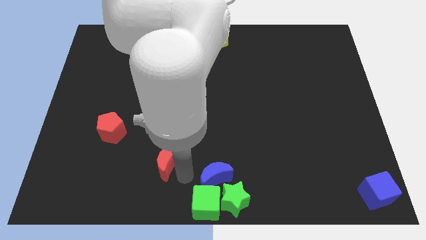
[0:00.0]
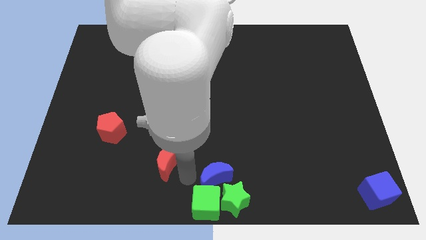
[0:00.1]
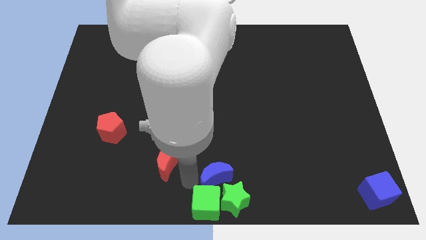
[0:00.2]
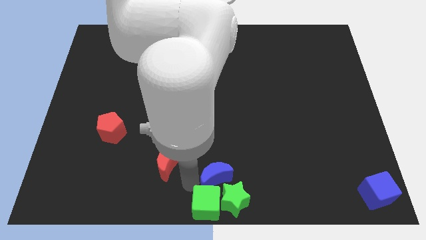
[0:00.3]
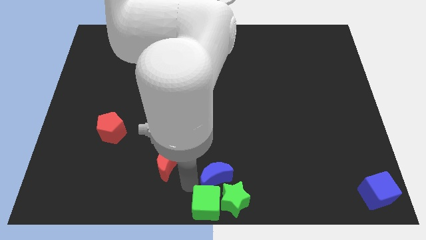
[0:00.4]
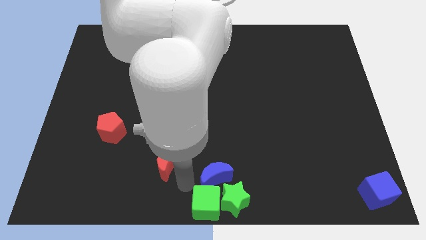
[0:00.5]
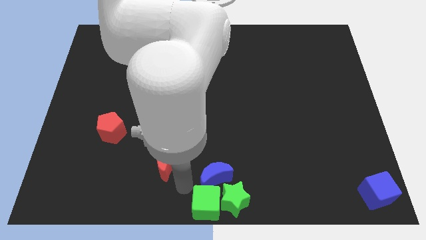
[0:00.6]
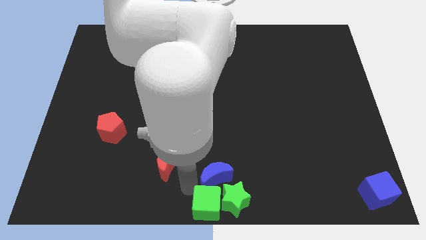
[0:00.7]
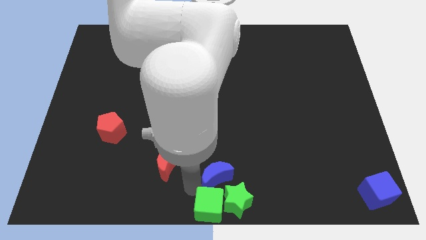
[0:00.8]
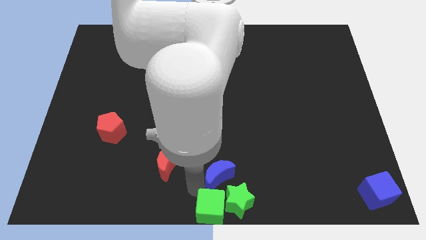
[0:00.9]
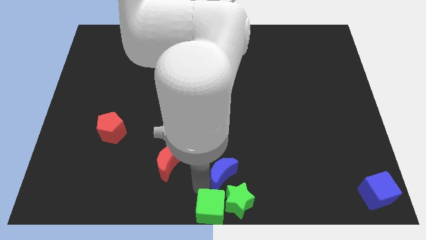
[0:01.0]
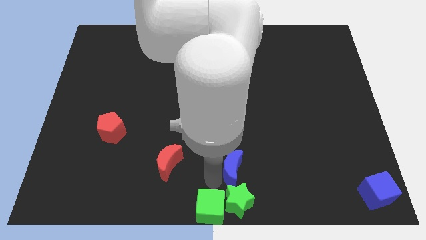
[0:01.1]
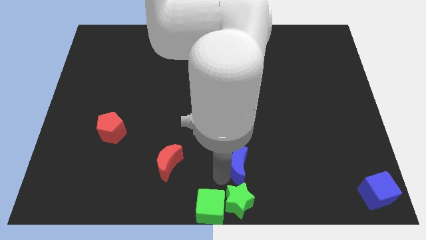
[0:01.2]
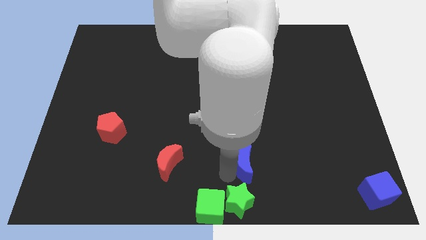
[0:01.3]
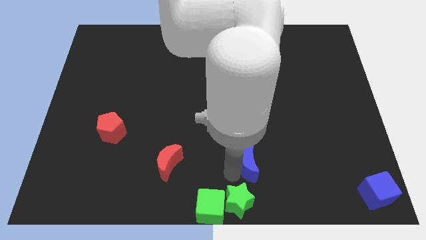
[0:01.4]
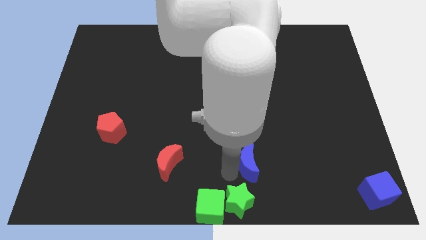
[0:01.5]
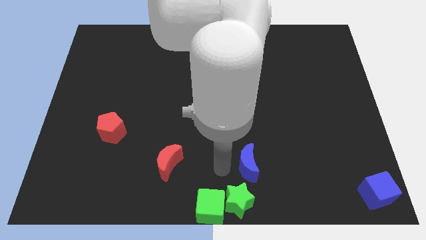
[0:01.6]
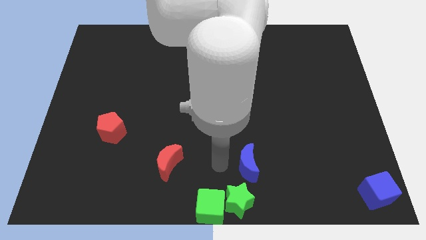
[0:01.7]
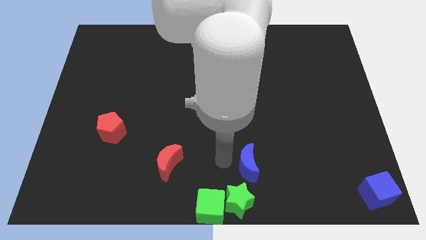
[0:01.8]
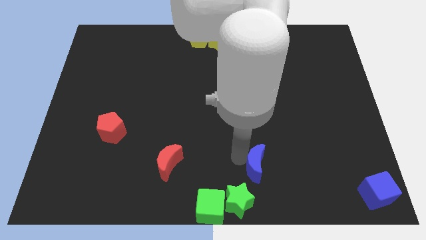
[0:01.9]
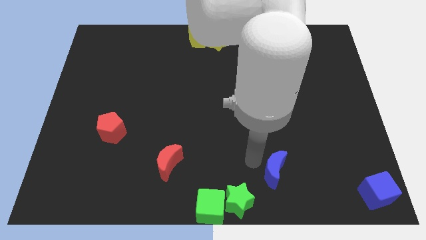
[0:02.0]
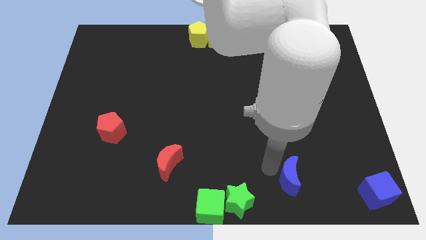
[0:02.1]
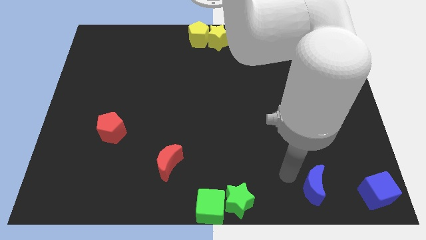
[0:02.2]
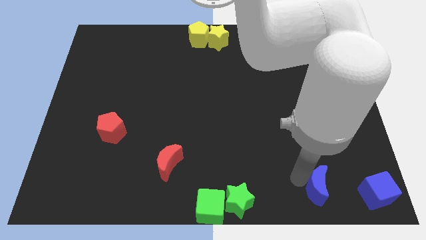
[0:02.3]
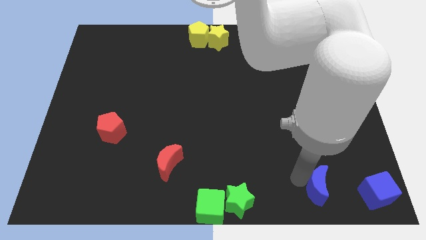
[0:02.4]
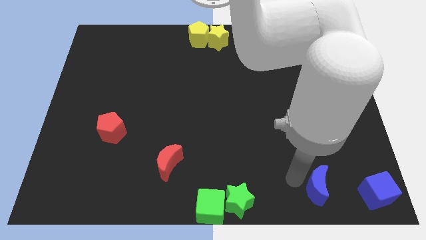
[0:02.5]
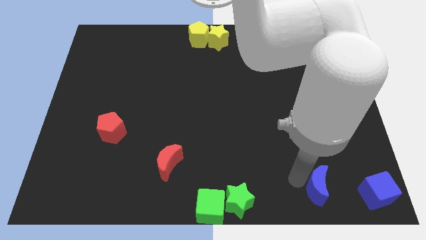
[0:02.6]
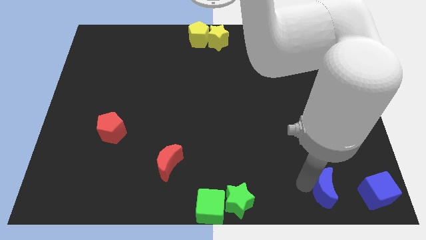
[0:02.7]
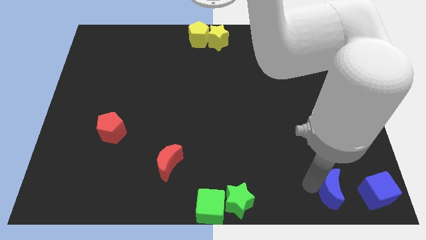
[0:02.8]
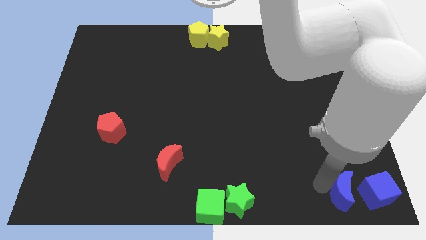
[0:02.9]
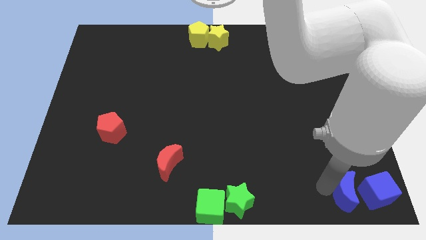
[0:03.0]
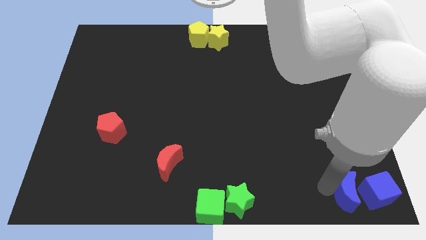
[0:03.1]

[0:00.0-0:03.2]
place the blue moon left to the blue cube

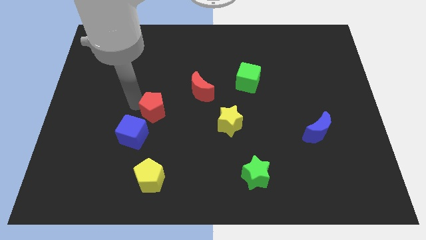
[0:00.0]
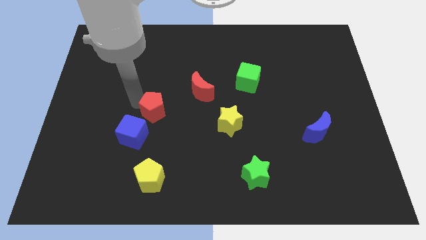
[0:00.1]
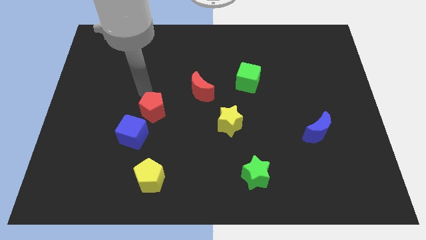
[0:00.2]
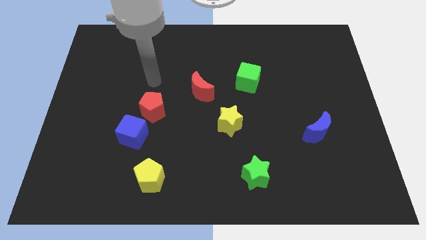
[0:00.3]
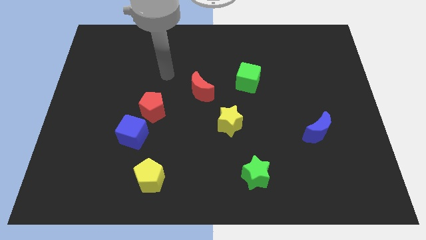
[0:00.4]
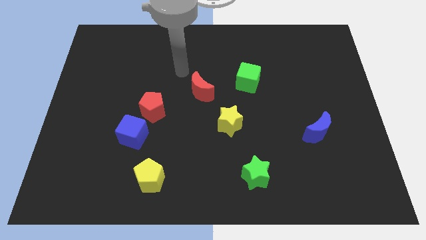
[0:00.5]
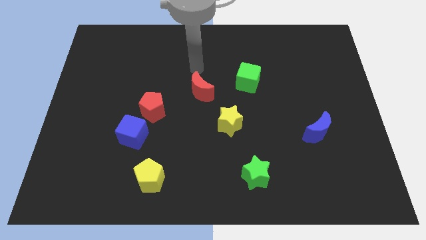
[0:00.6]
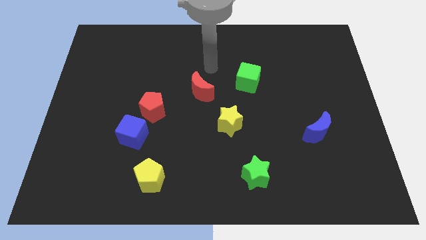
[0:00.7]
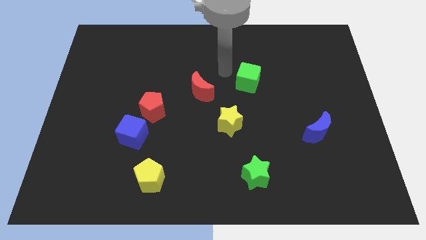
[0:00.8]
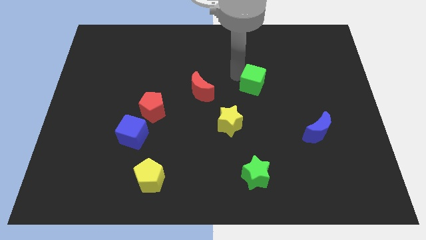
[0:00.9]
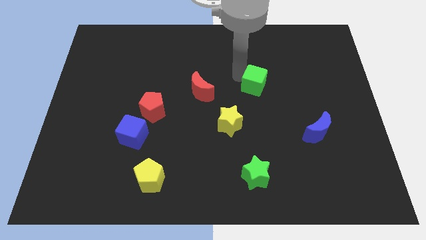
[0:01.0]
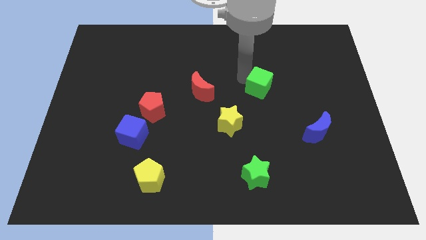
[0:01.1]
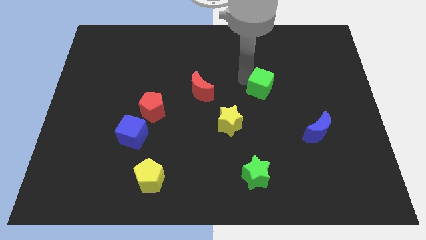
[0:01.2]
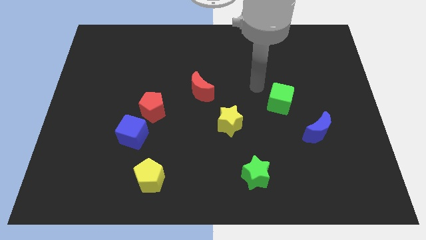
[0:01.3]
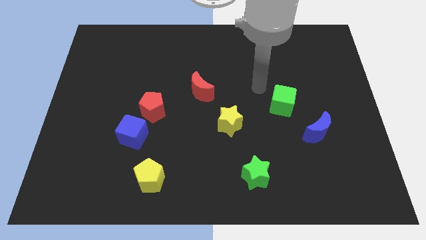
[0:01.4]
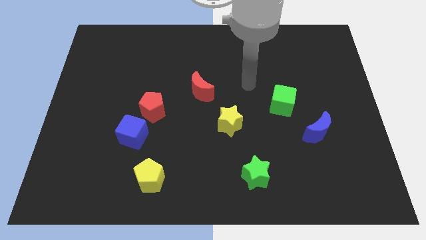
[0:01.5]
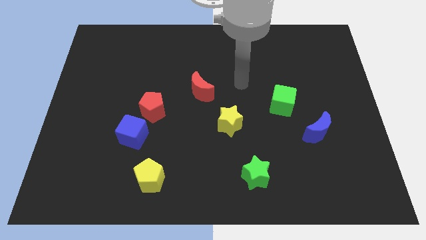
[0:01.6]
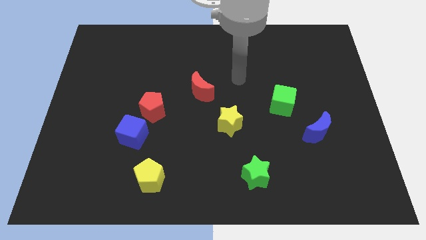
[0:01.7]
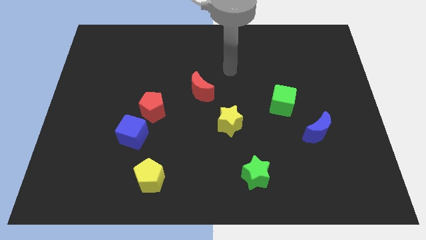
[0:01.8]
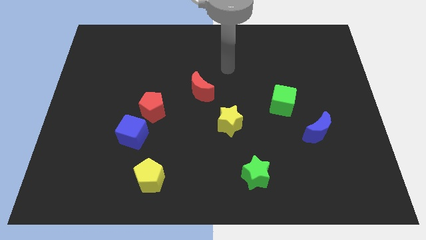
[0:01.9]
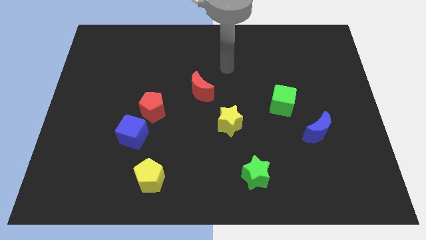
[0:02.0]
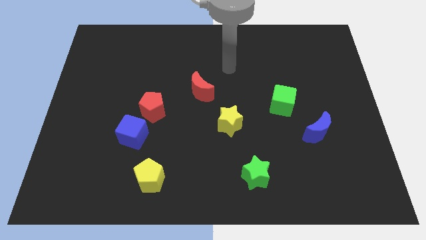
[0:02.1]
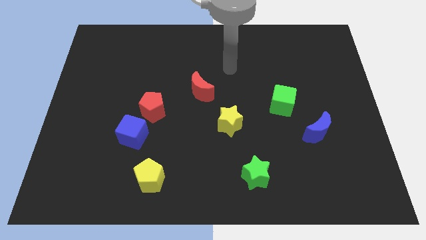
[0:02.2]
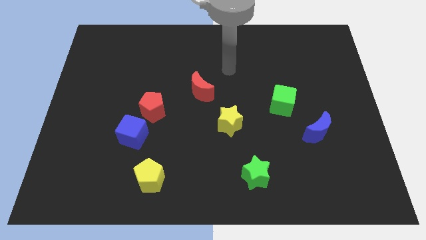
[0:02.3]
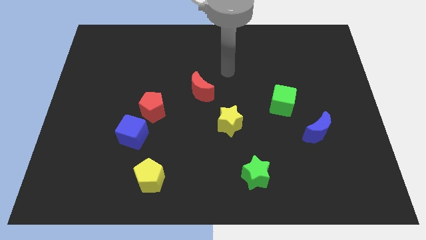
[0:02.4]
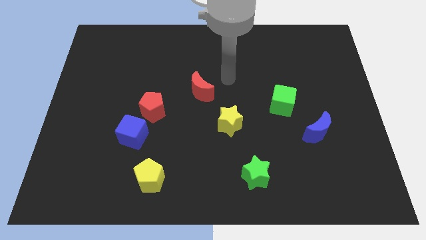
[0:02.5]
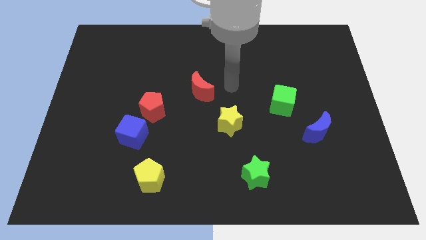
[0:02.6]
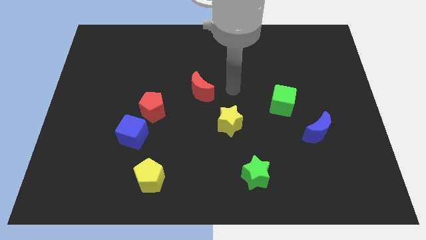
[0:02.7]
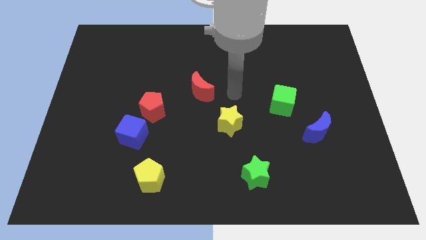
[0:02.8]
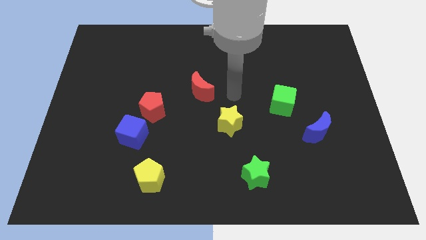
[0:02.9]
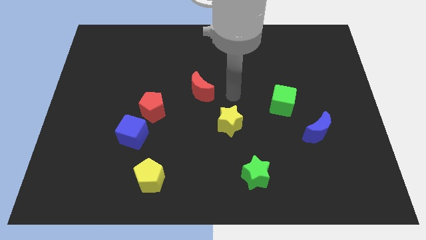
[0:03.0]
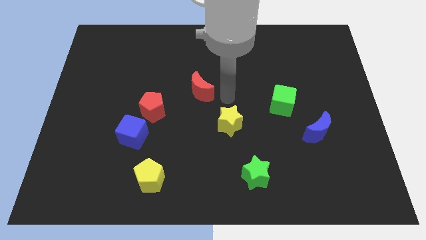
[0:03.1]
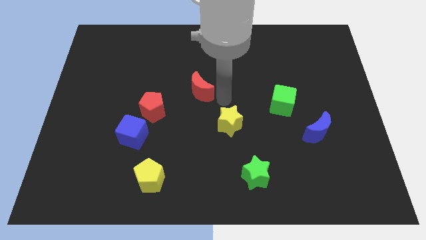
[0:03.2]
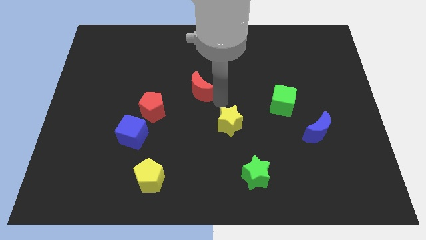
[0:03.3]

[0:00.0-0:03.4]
push the green cube to the top left of the blue crescent

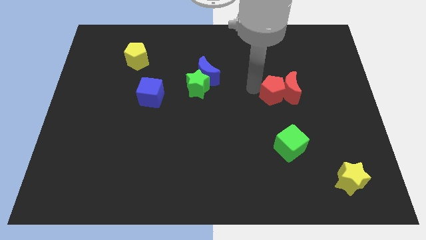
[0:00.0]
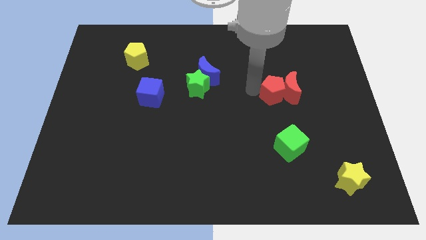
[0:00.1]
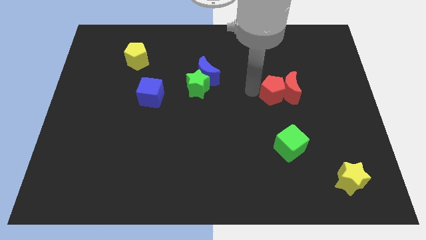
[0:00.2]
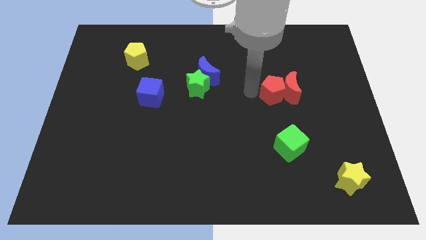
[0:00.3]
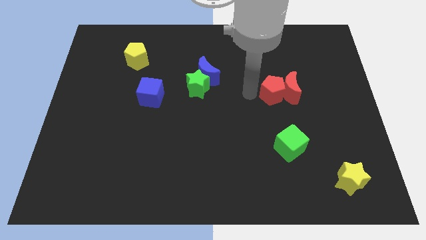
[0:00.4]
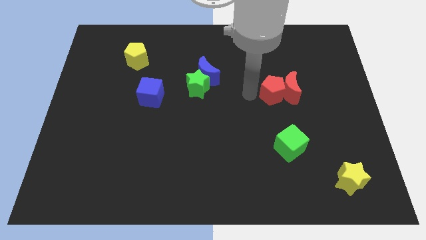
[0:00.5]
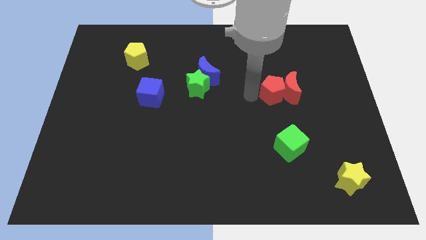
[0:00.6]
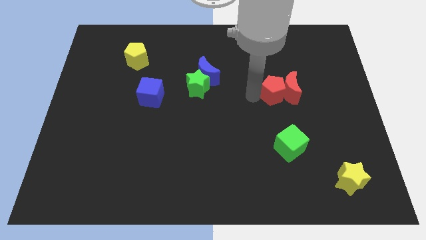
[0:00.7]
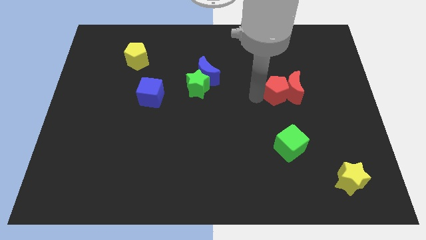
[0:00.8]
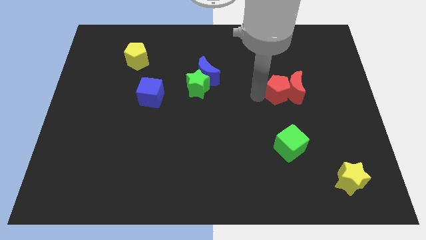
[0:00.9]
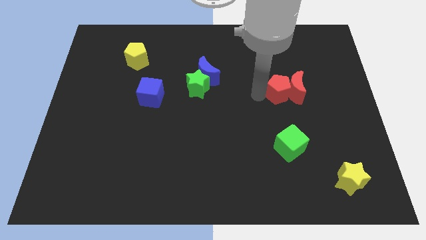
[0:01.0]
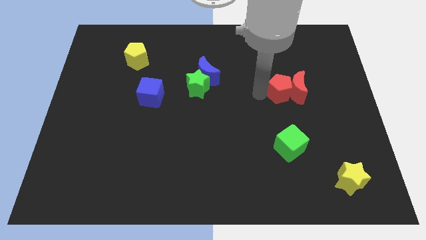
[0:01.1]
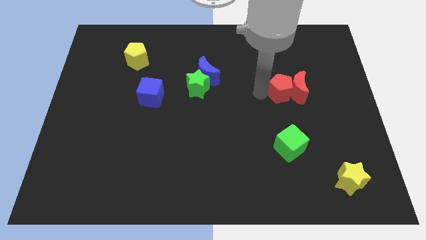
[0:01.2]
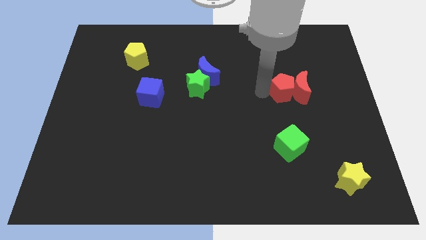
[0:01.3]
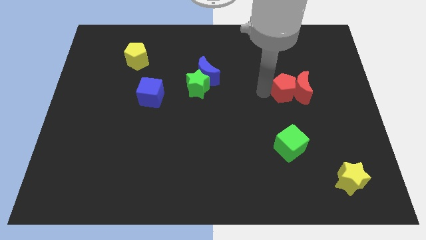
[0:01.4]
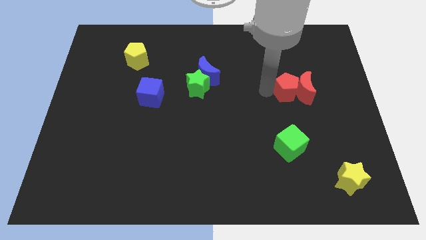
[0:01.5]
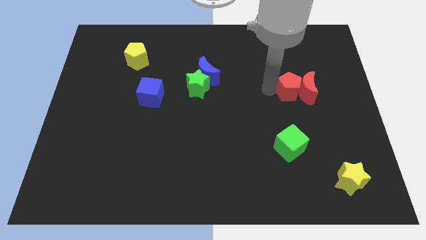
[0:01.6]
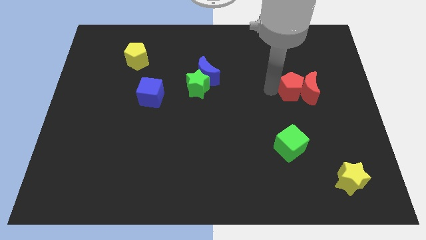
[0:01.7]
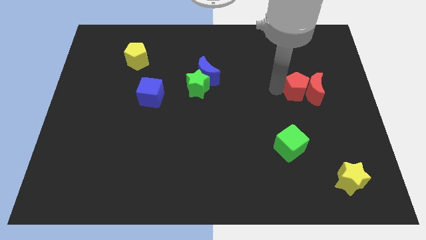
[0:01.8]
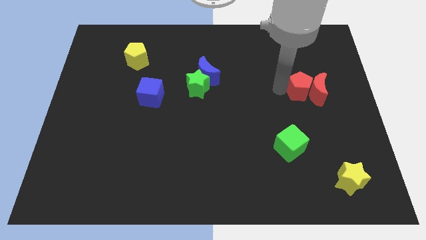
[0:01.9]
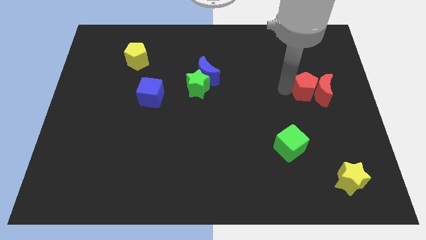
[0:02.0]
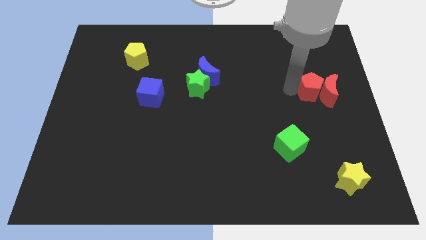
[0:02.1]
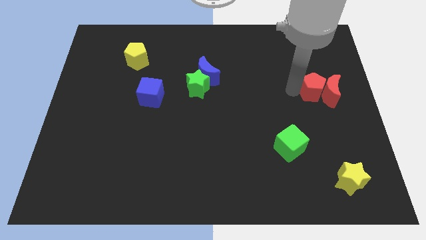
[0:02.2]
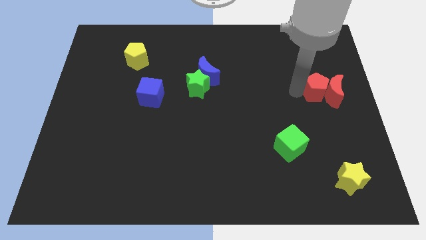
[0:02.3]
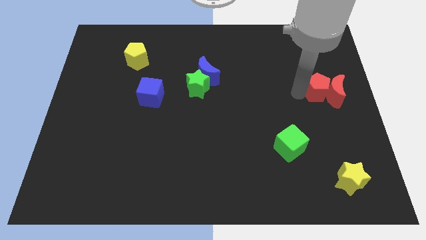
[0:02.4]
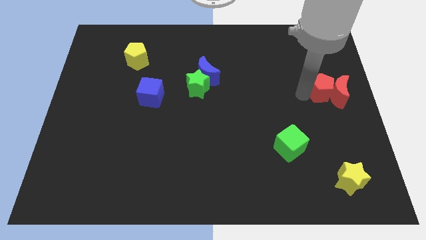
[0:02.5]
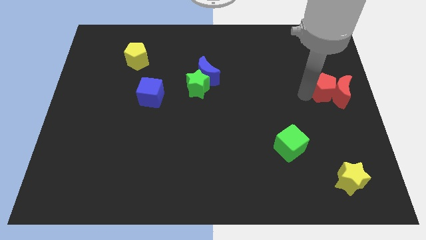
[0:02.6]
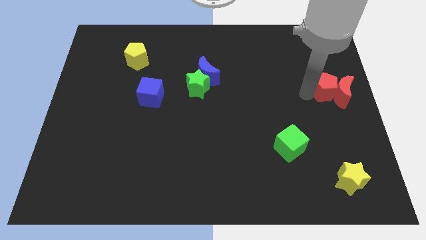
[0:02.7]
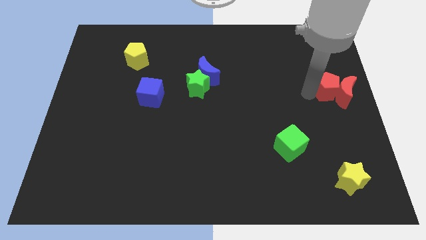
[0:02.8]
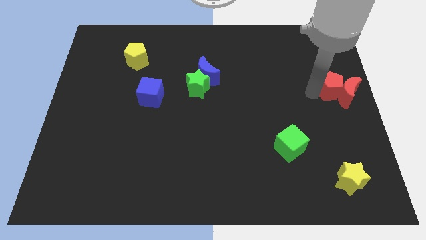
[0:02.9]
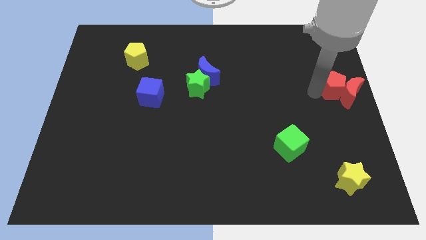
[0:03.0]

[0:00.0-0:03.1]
place the red blocks at the center right side of the board
